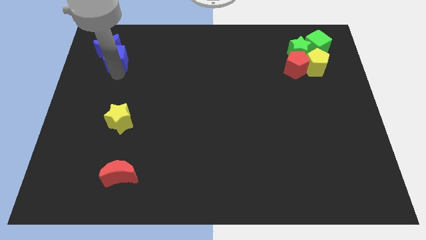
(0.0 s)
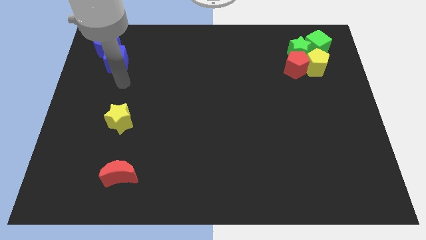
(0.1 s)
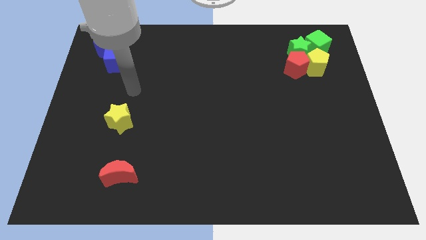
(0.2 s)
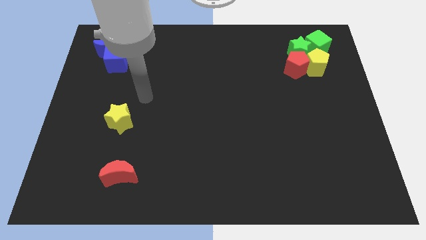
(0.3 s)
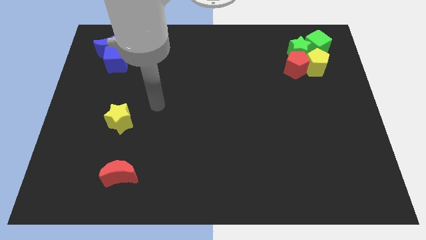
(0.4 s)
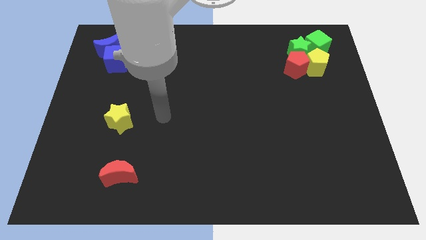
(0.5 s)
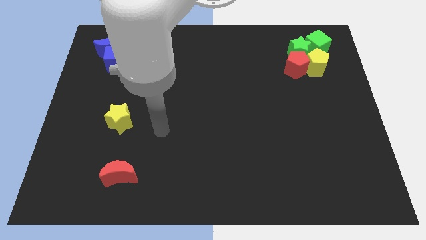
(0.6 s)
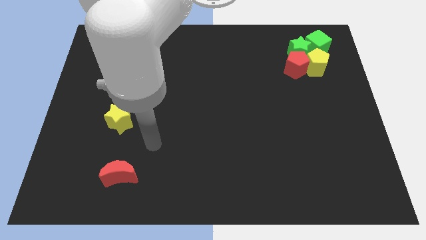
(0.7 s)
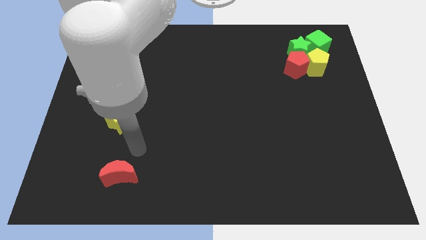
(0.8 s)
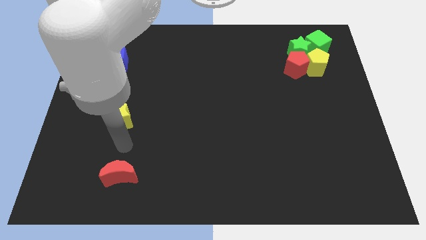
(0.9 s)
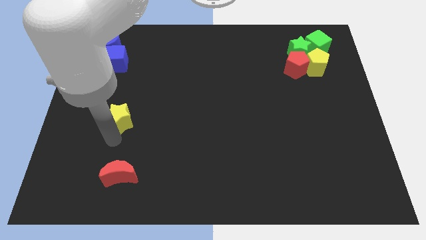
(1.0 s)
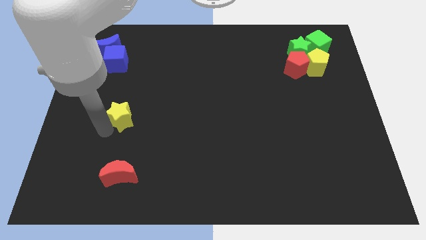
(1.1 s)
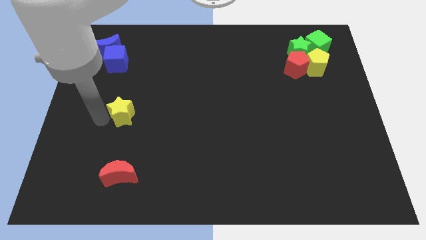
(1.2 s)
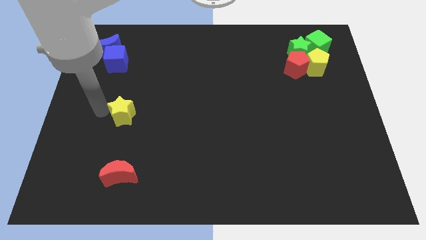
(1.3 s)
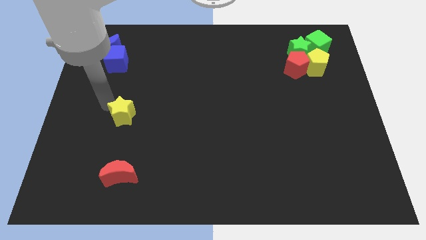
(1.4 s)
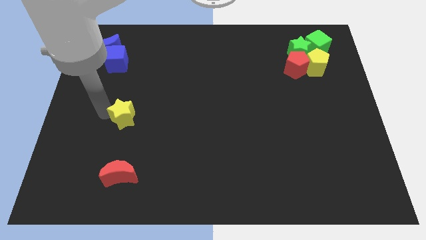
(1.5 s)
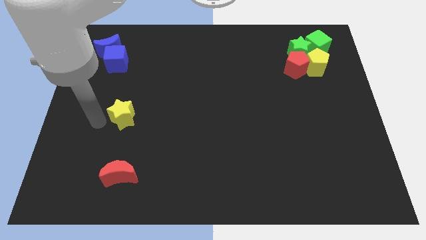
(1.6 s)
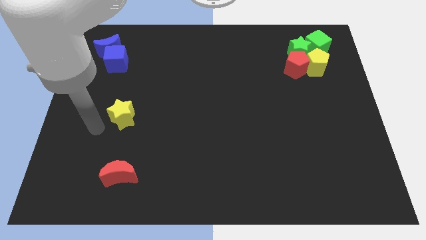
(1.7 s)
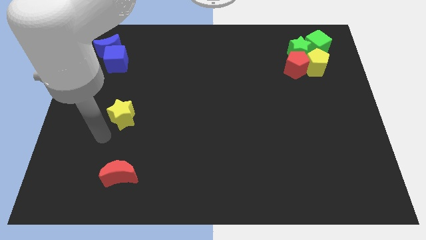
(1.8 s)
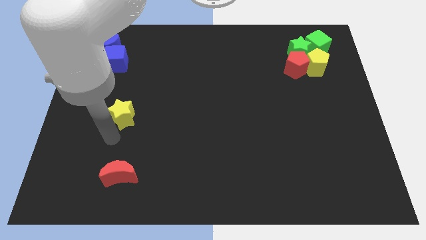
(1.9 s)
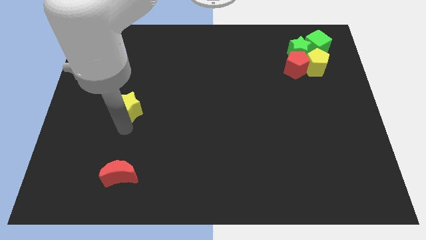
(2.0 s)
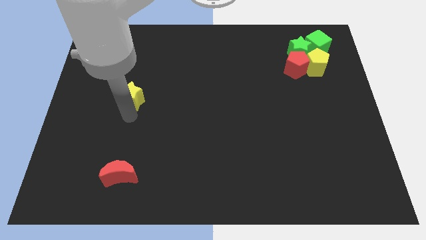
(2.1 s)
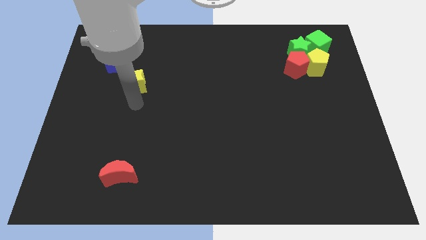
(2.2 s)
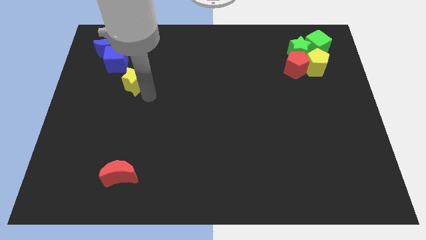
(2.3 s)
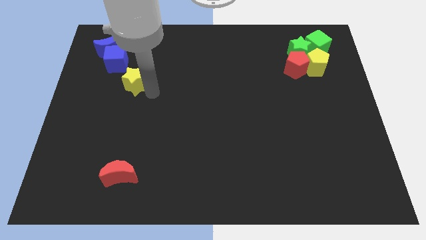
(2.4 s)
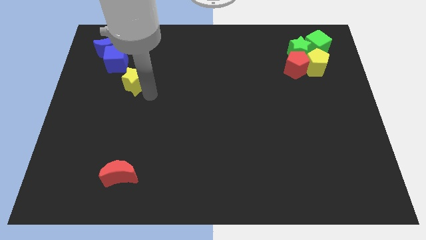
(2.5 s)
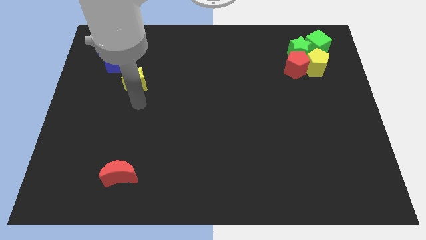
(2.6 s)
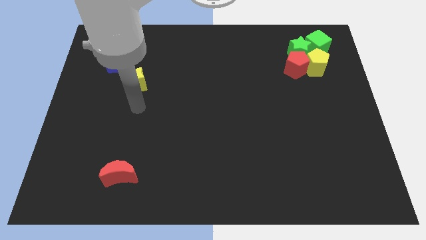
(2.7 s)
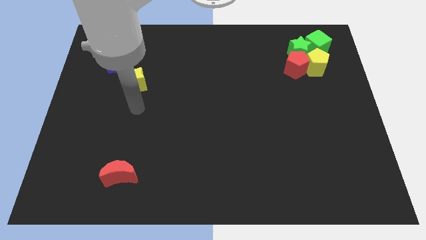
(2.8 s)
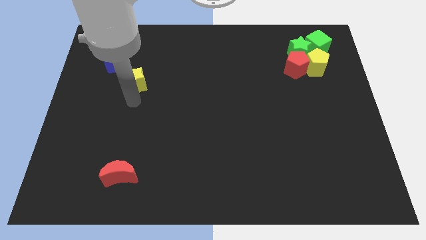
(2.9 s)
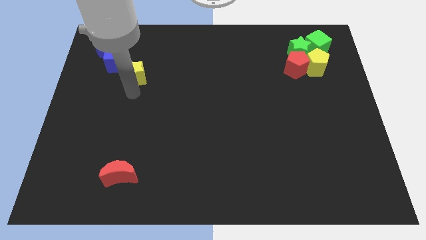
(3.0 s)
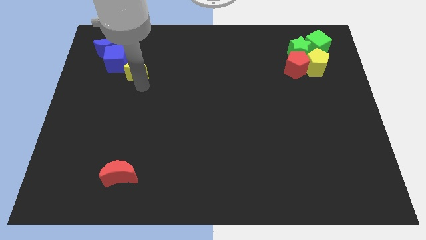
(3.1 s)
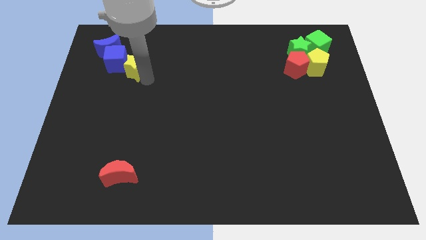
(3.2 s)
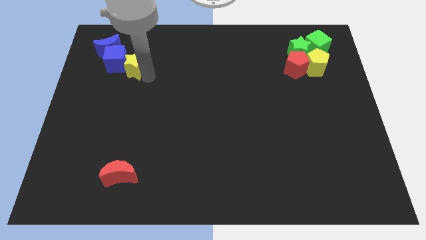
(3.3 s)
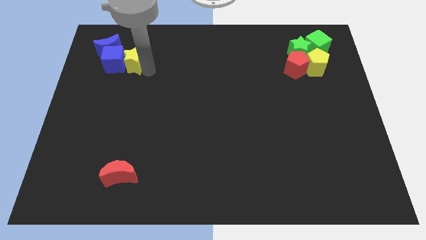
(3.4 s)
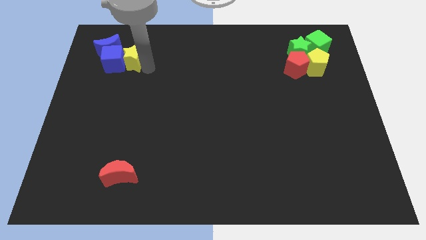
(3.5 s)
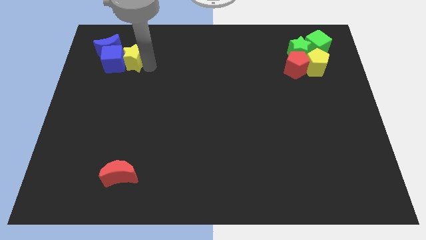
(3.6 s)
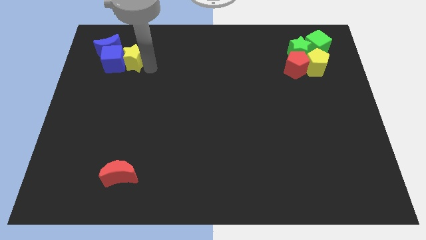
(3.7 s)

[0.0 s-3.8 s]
place the yellow star right to the blue cube

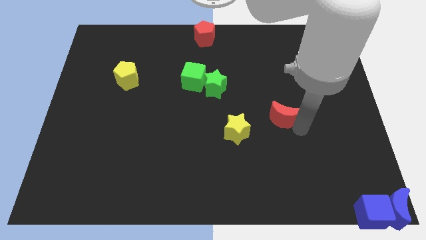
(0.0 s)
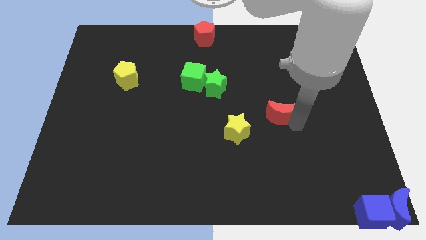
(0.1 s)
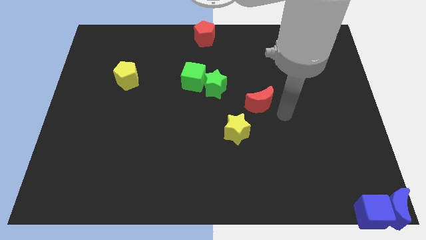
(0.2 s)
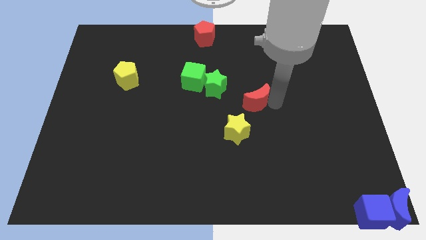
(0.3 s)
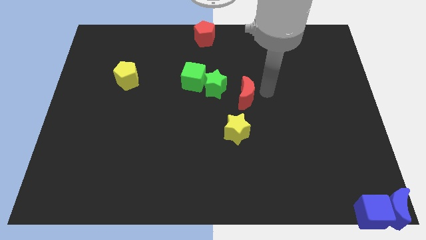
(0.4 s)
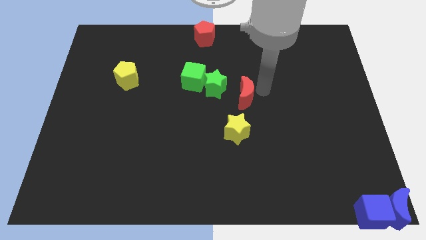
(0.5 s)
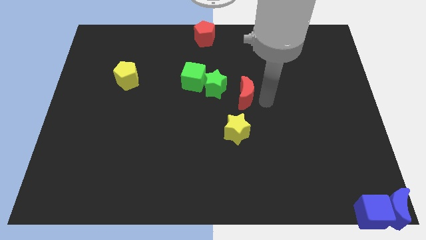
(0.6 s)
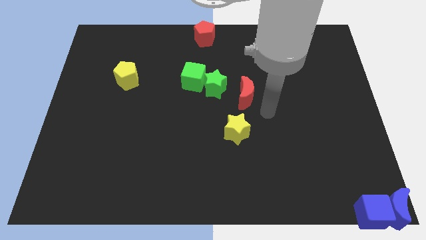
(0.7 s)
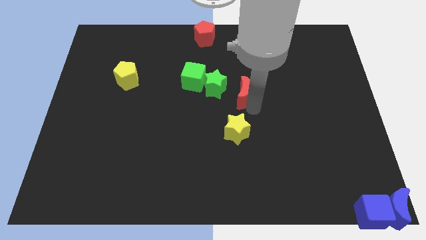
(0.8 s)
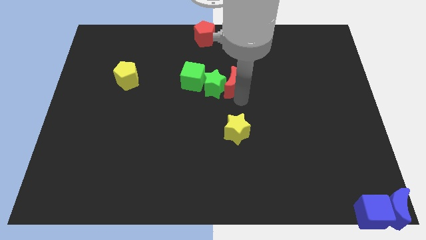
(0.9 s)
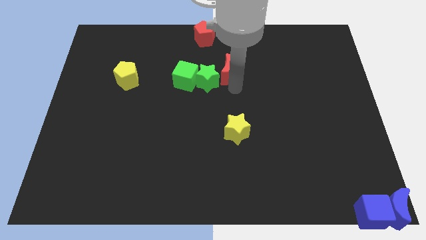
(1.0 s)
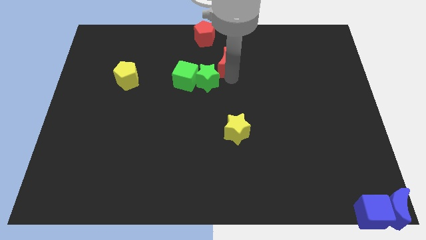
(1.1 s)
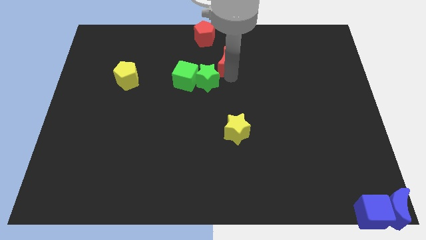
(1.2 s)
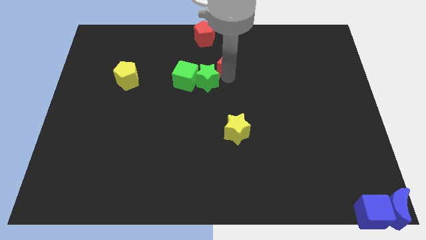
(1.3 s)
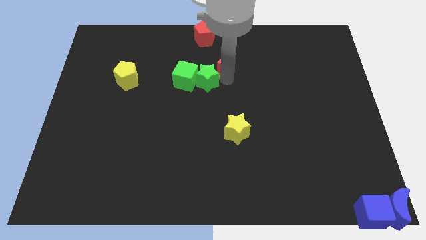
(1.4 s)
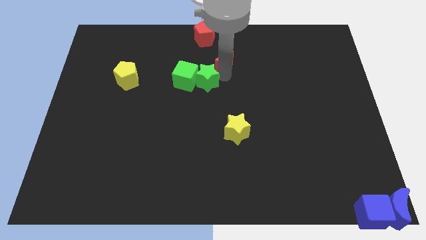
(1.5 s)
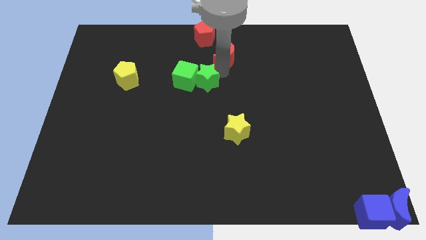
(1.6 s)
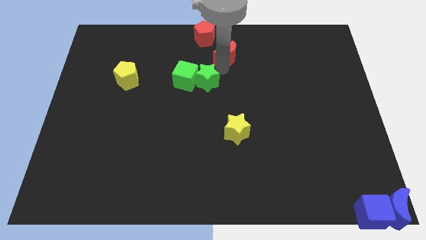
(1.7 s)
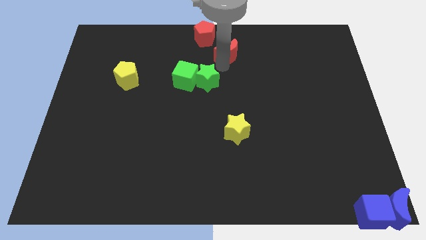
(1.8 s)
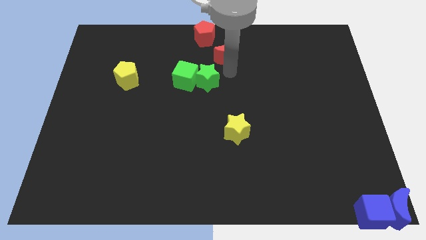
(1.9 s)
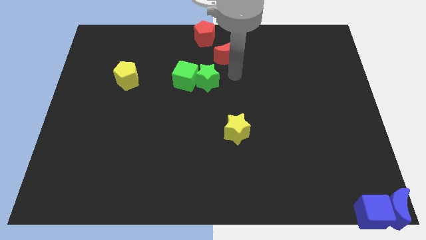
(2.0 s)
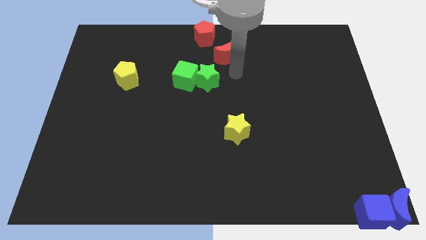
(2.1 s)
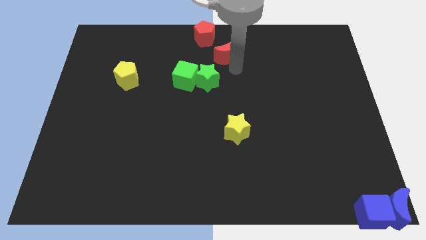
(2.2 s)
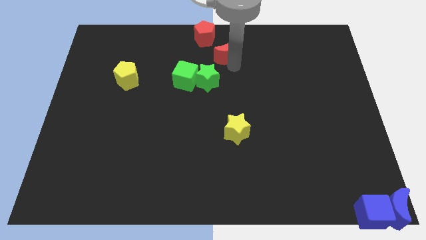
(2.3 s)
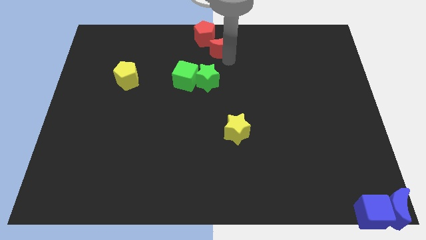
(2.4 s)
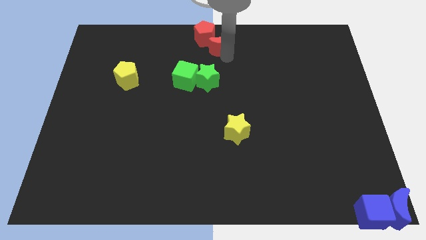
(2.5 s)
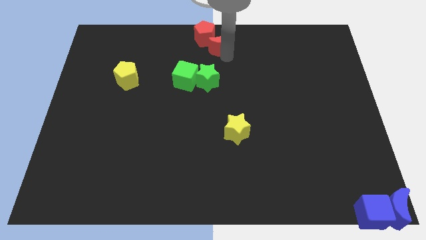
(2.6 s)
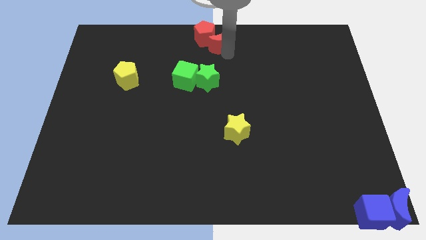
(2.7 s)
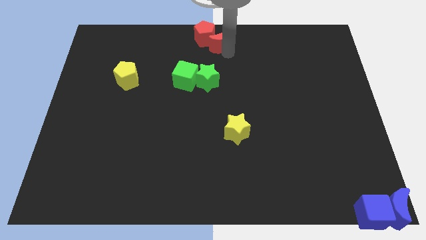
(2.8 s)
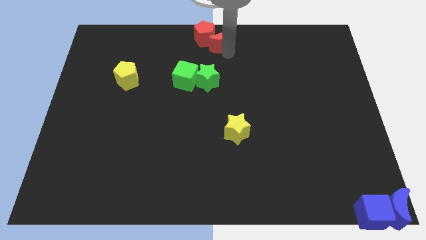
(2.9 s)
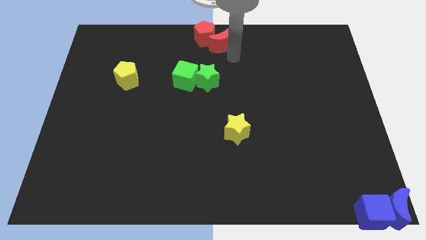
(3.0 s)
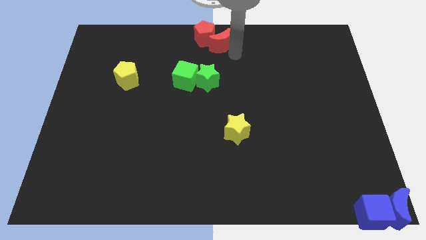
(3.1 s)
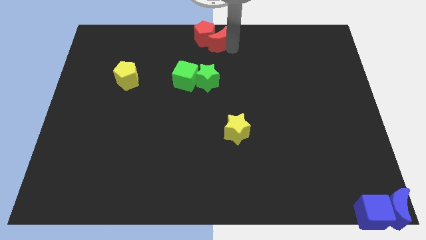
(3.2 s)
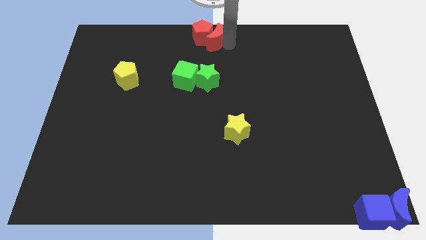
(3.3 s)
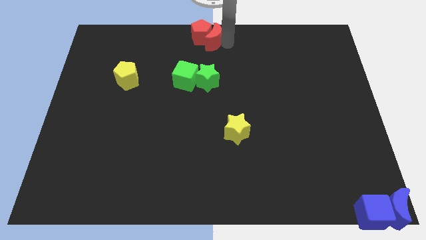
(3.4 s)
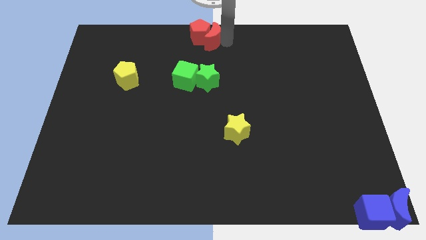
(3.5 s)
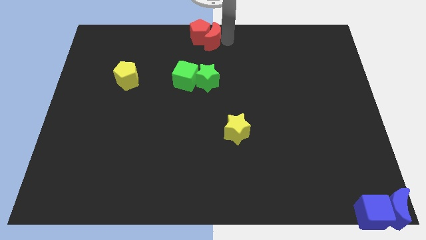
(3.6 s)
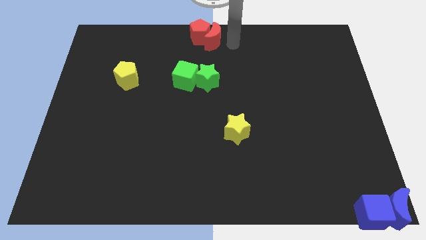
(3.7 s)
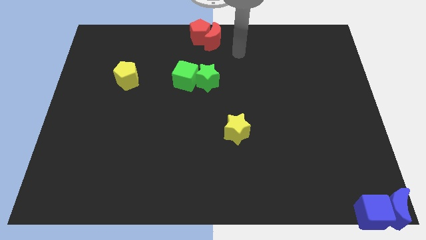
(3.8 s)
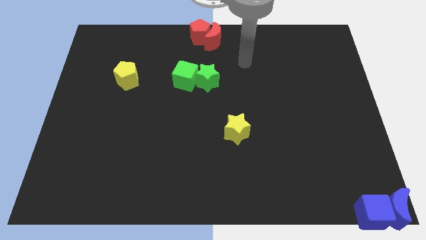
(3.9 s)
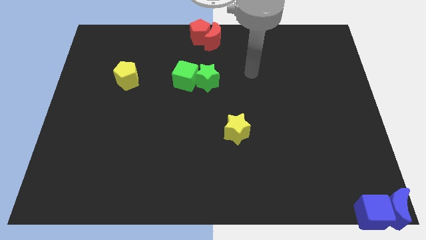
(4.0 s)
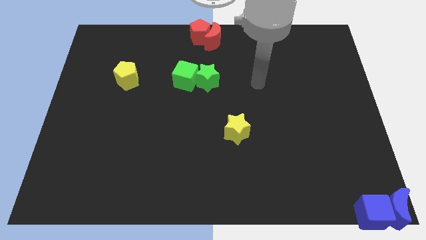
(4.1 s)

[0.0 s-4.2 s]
push red crescent to the top center of the board

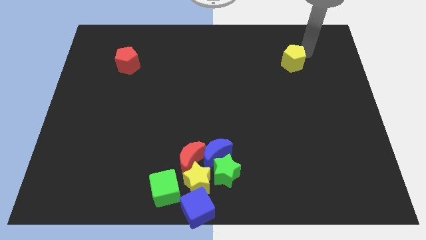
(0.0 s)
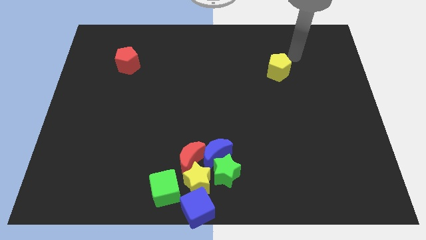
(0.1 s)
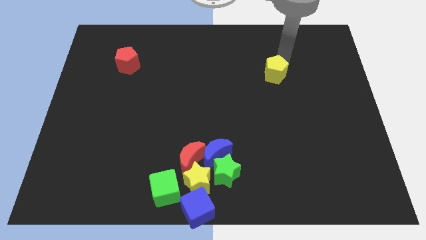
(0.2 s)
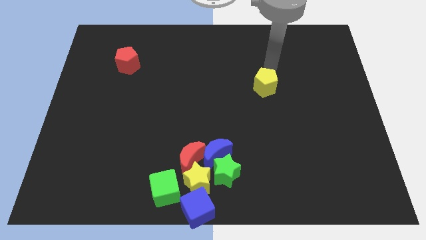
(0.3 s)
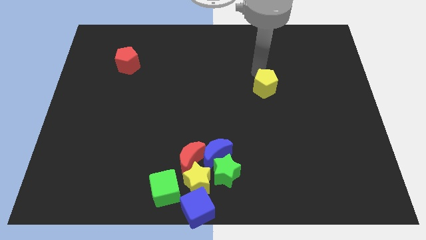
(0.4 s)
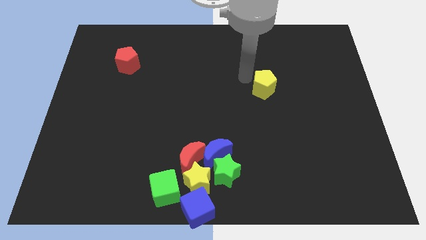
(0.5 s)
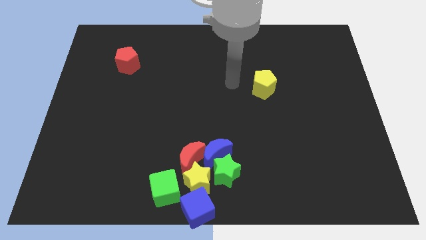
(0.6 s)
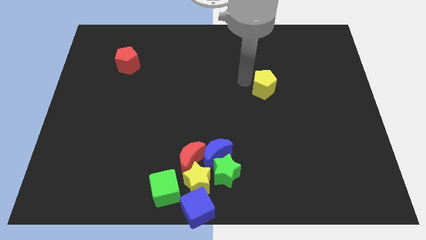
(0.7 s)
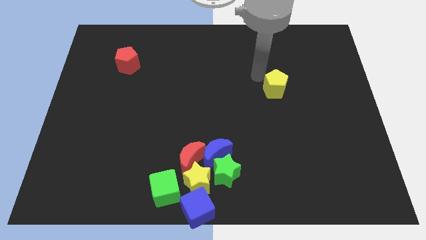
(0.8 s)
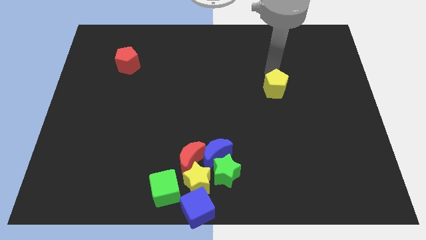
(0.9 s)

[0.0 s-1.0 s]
move the yellow pentagon diagonally to the top right green star
